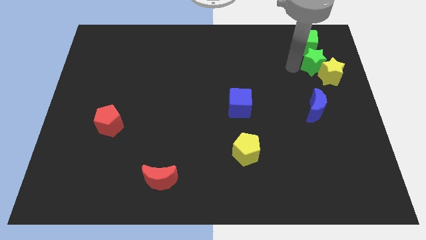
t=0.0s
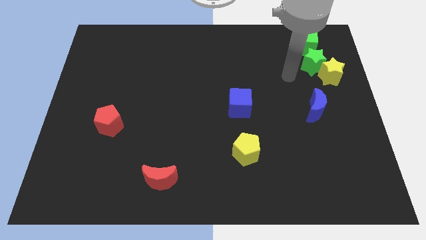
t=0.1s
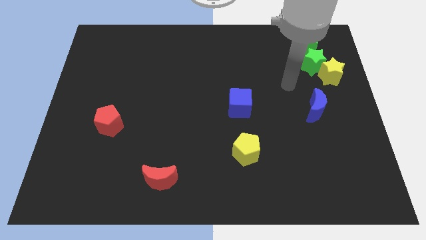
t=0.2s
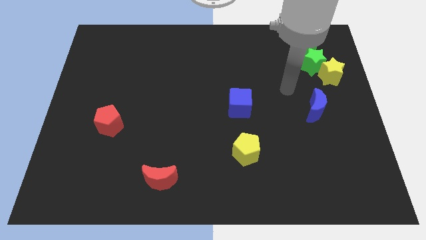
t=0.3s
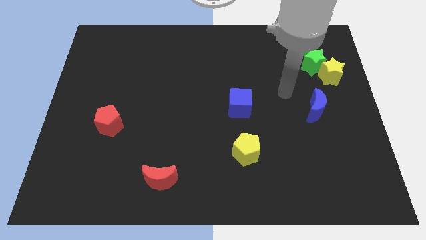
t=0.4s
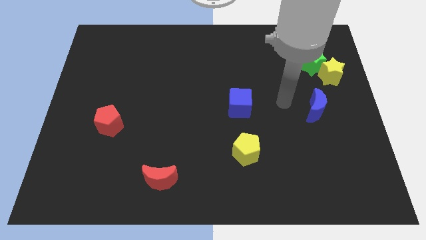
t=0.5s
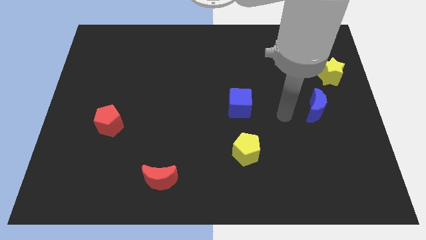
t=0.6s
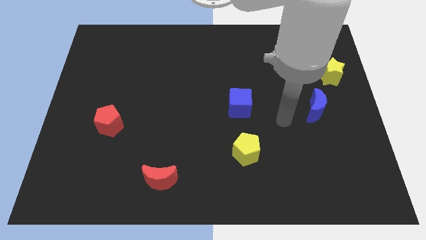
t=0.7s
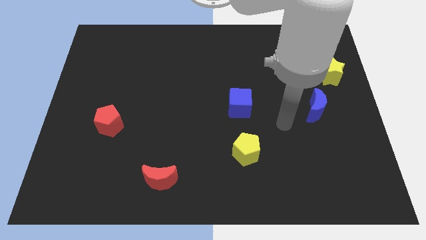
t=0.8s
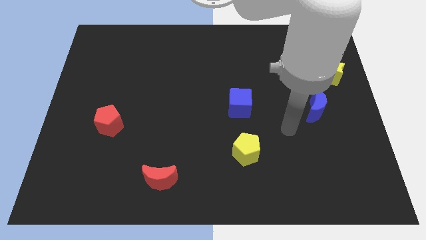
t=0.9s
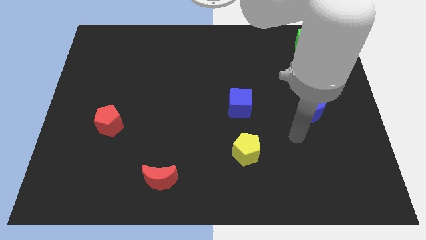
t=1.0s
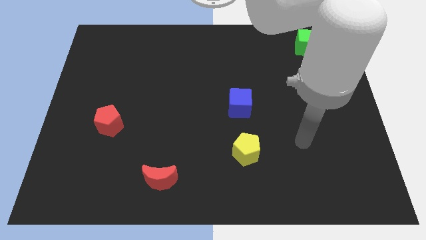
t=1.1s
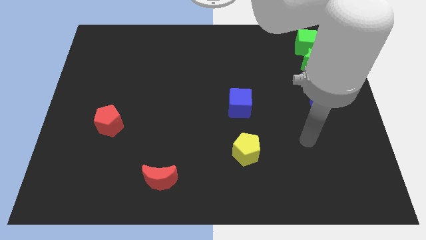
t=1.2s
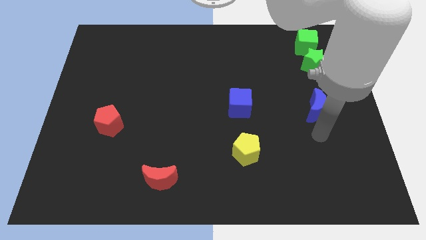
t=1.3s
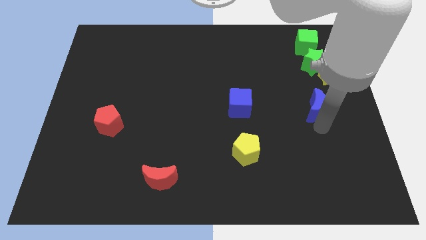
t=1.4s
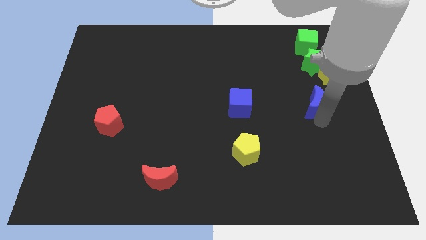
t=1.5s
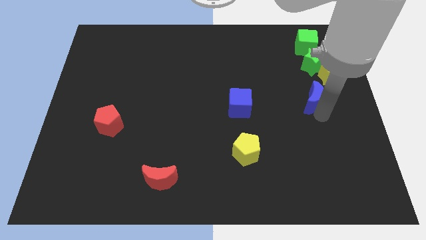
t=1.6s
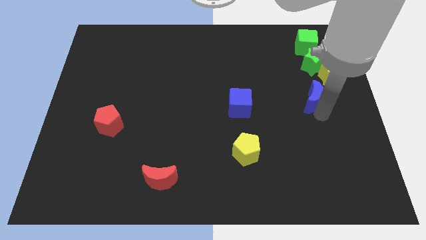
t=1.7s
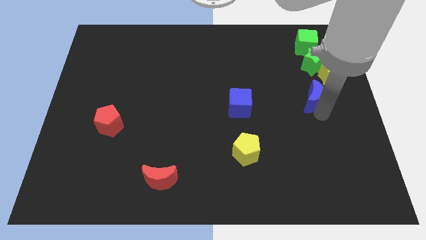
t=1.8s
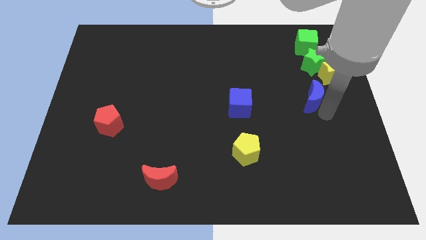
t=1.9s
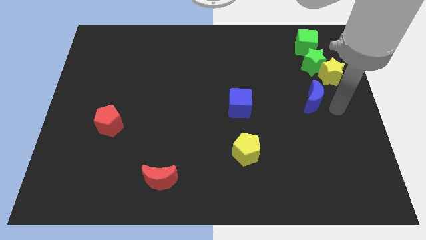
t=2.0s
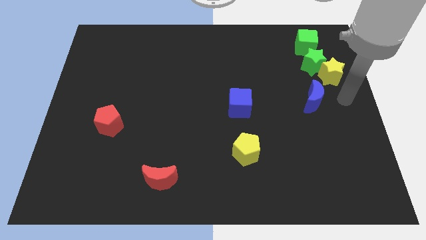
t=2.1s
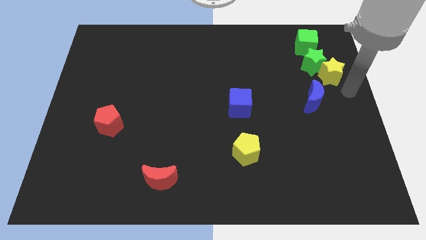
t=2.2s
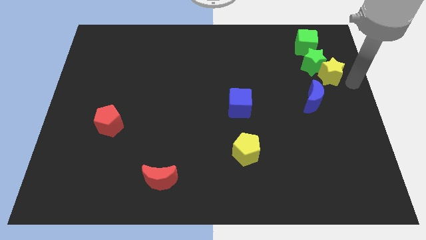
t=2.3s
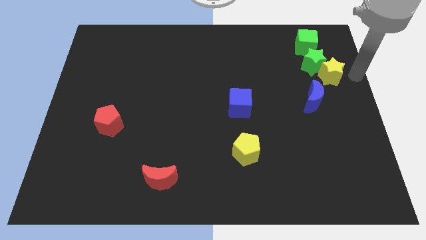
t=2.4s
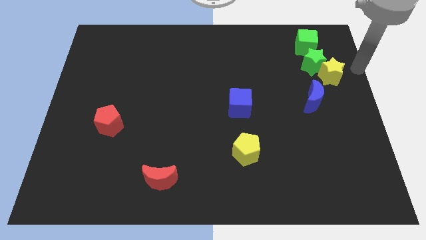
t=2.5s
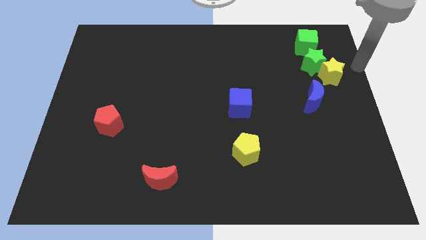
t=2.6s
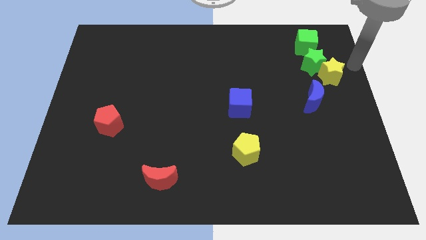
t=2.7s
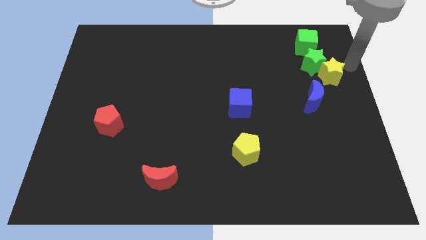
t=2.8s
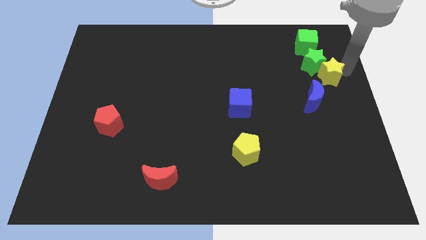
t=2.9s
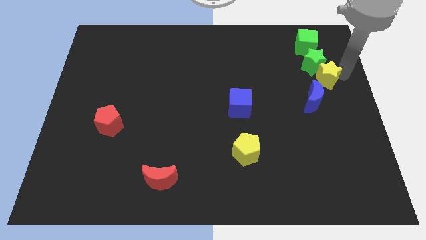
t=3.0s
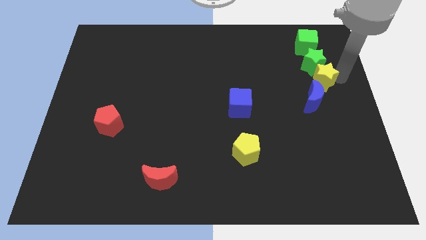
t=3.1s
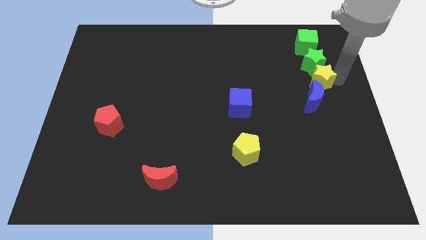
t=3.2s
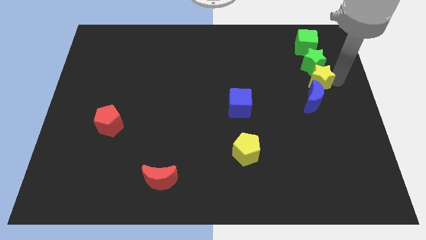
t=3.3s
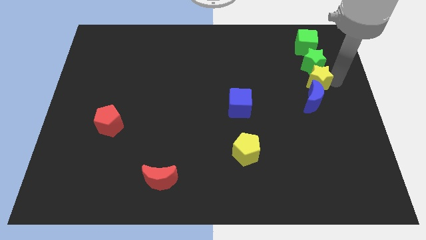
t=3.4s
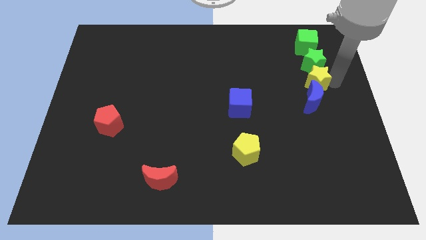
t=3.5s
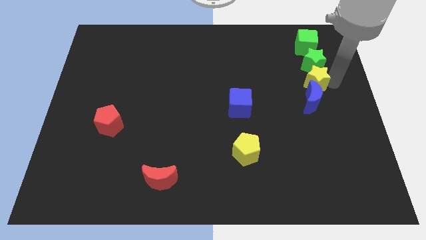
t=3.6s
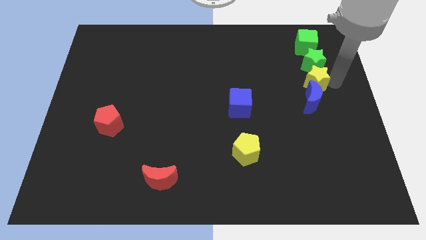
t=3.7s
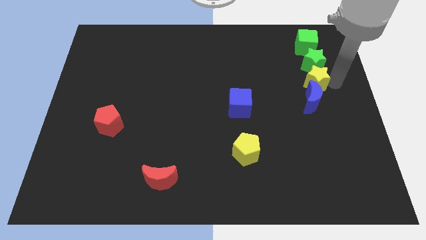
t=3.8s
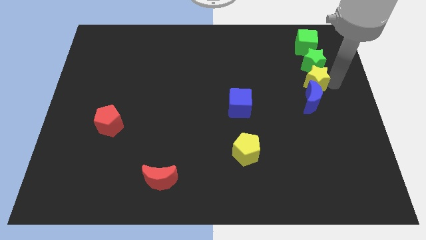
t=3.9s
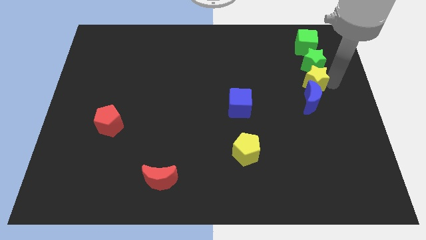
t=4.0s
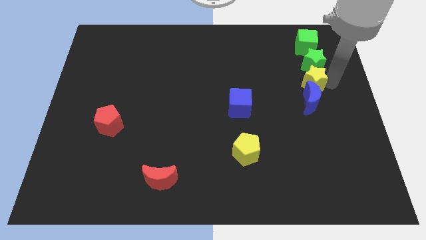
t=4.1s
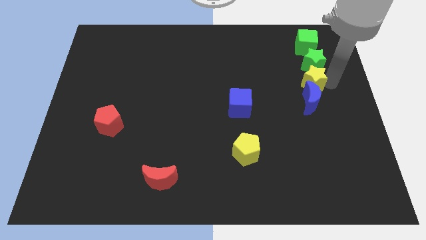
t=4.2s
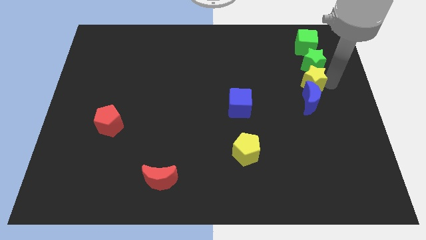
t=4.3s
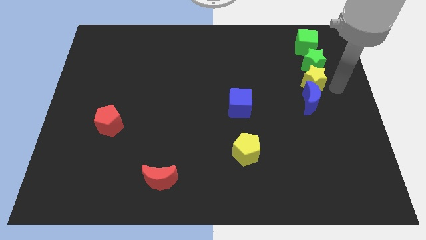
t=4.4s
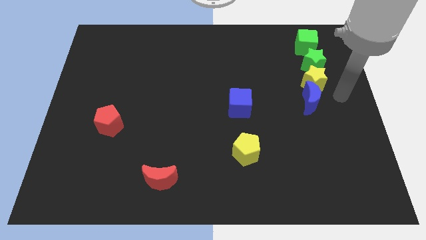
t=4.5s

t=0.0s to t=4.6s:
move the yellow star between the green star and blue crescent

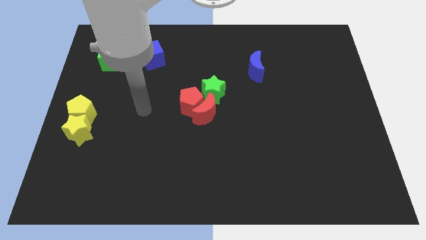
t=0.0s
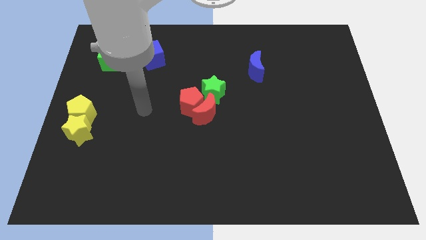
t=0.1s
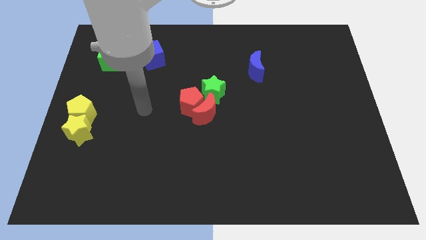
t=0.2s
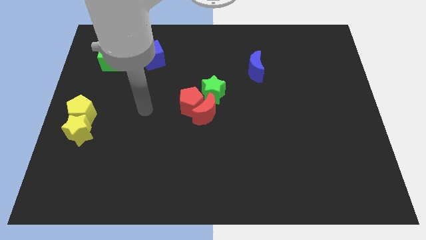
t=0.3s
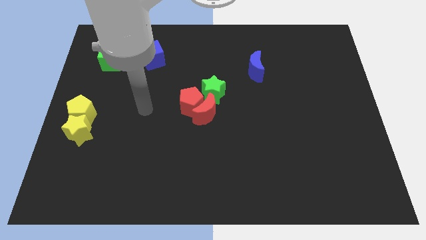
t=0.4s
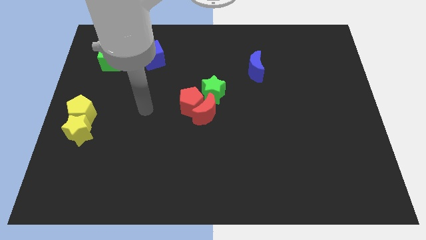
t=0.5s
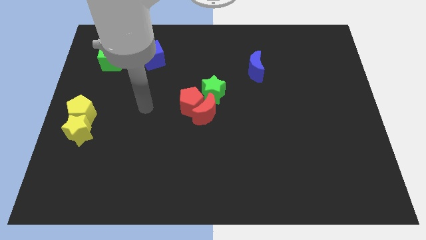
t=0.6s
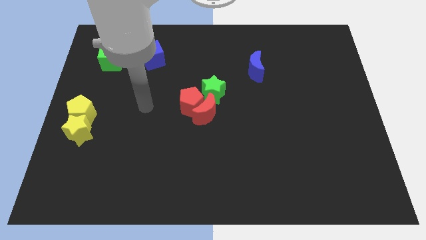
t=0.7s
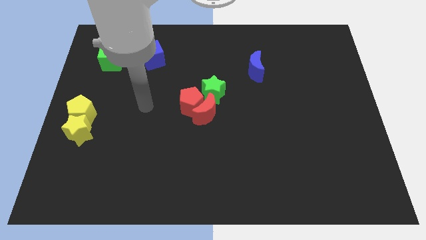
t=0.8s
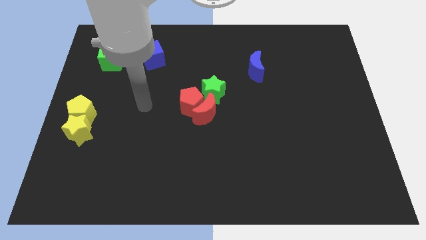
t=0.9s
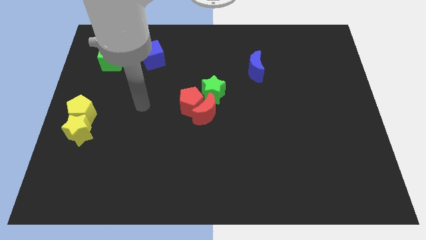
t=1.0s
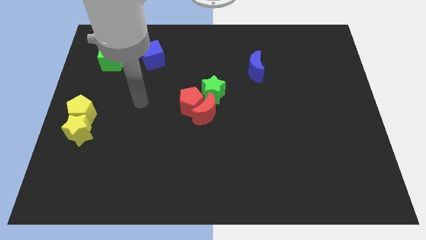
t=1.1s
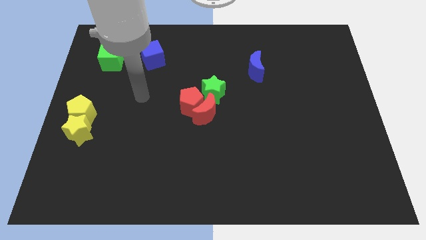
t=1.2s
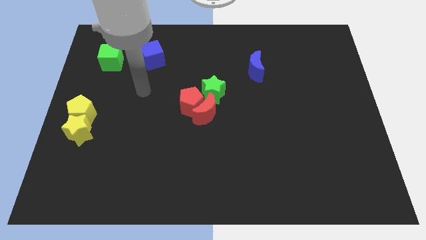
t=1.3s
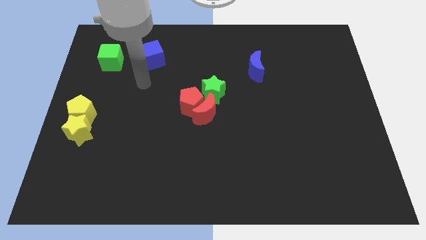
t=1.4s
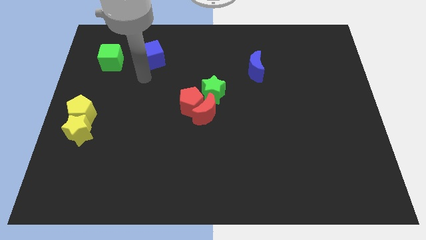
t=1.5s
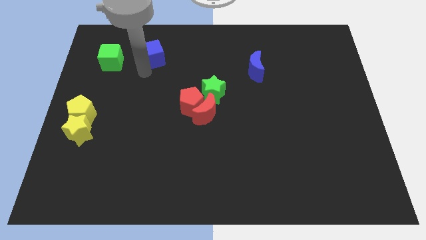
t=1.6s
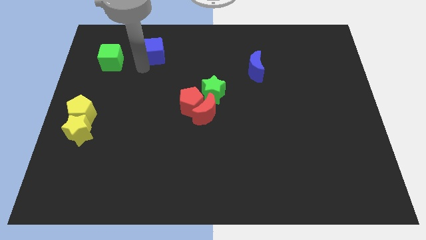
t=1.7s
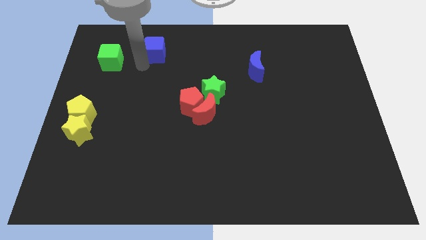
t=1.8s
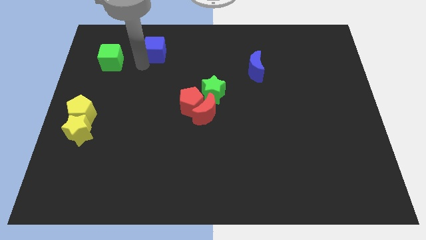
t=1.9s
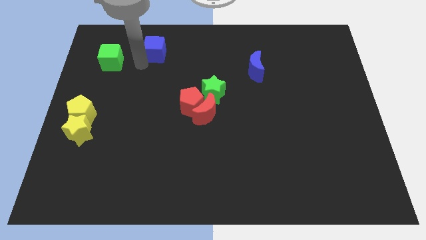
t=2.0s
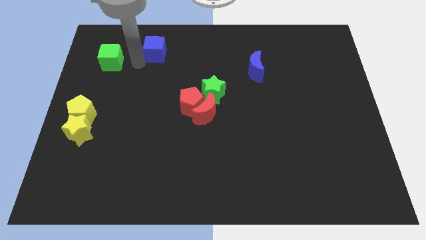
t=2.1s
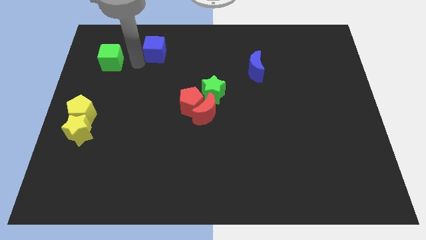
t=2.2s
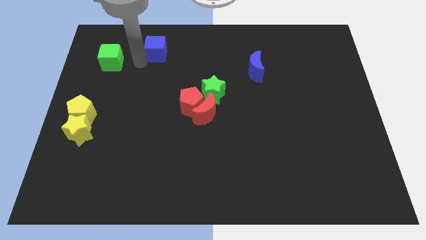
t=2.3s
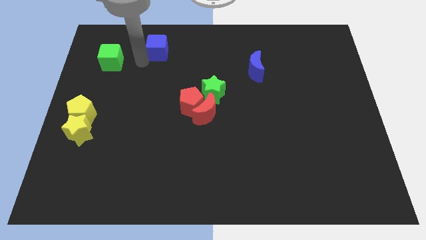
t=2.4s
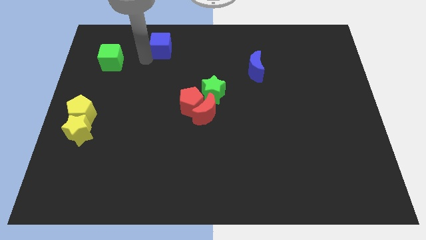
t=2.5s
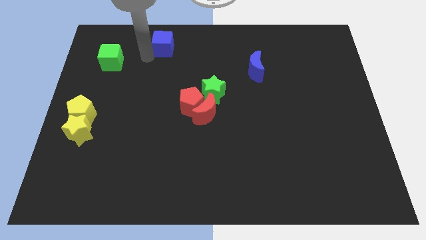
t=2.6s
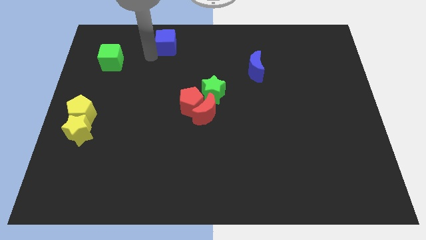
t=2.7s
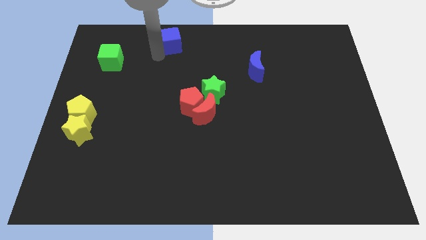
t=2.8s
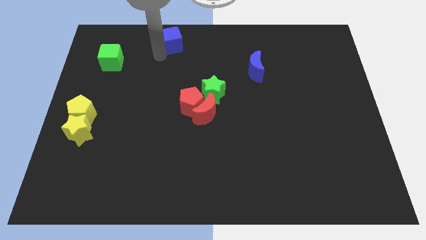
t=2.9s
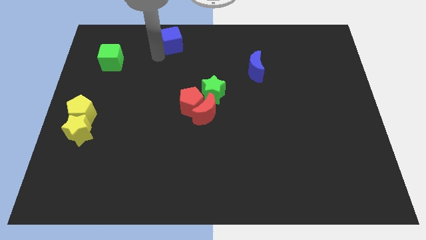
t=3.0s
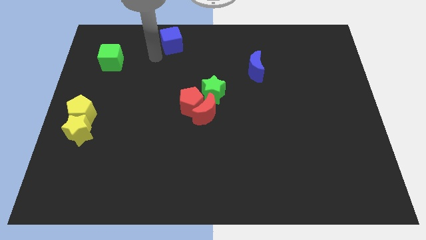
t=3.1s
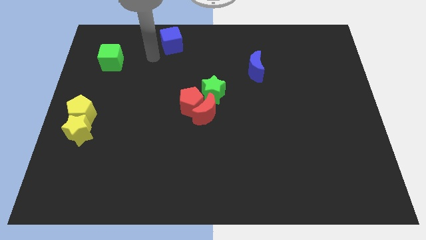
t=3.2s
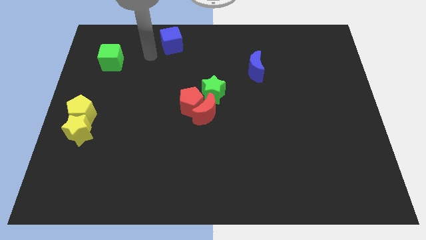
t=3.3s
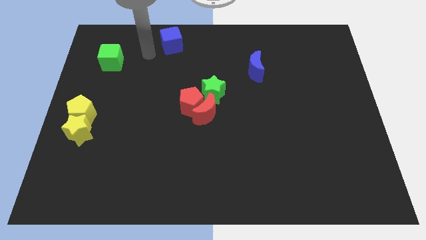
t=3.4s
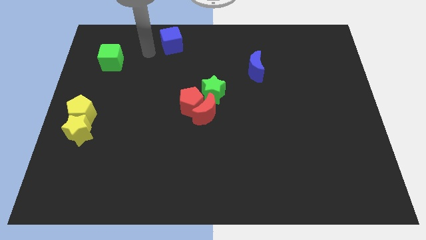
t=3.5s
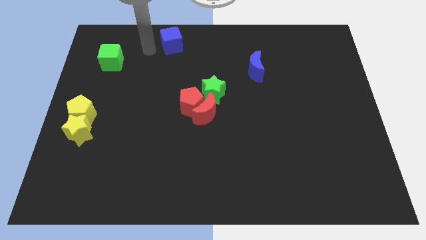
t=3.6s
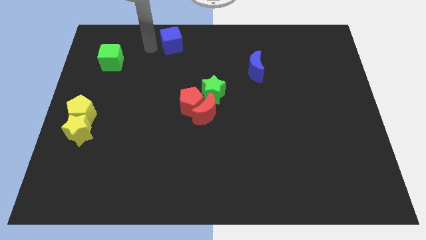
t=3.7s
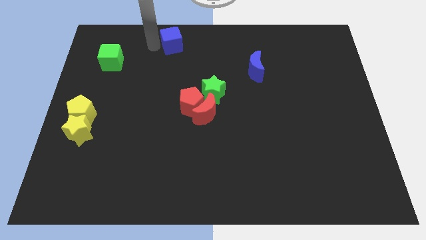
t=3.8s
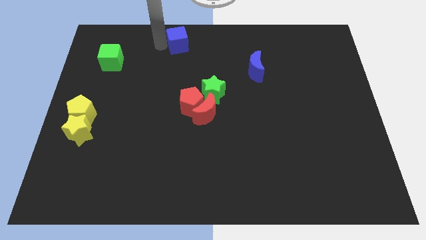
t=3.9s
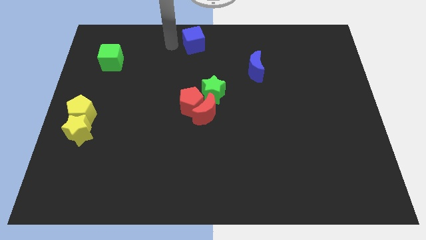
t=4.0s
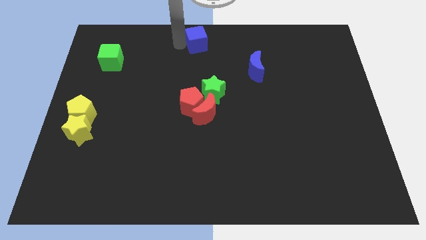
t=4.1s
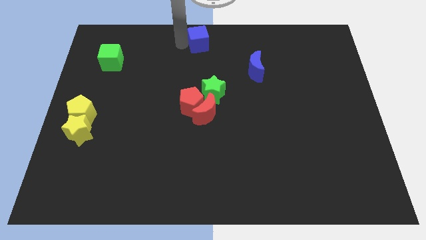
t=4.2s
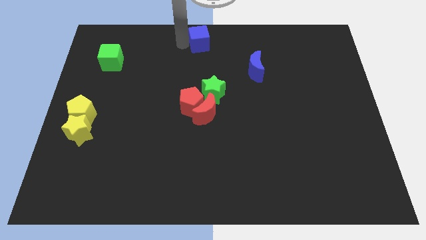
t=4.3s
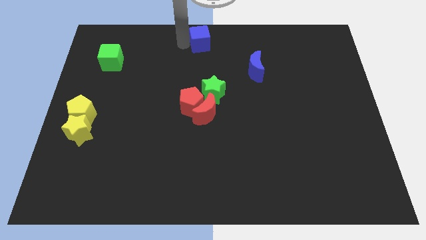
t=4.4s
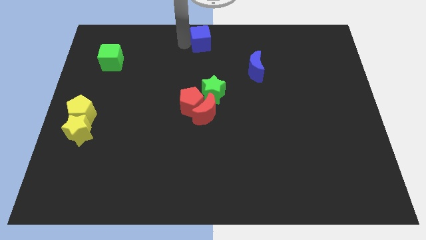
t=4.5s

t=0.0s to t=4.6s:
push the blue cube to the top center
